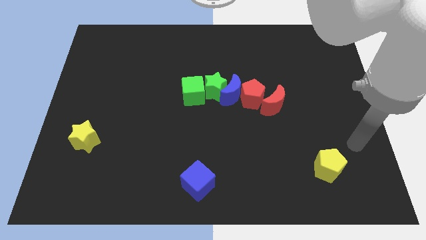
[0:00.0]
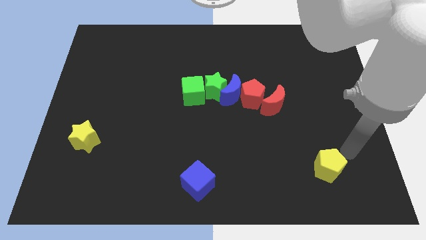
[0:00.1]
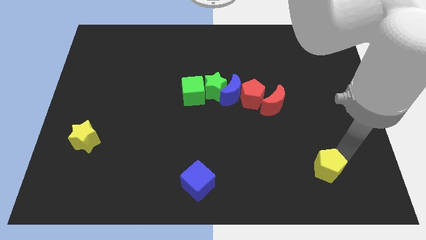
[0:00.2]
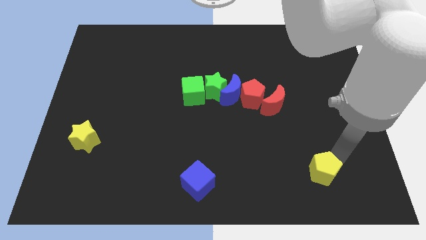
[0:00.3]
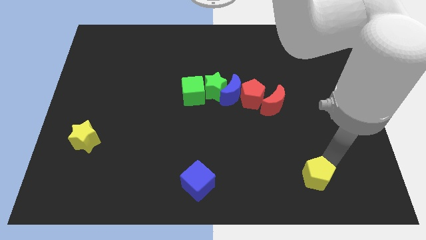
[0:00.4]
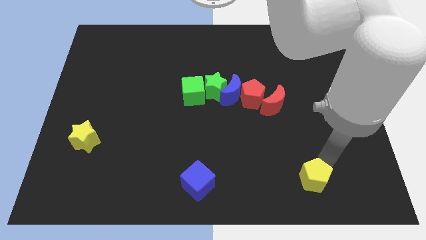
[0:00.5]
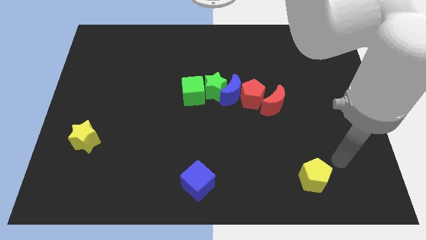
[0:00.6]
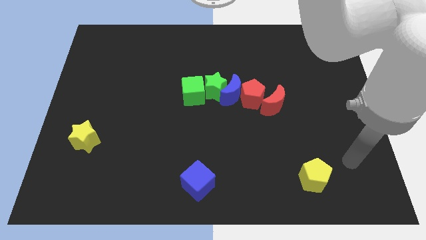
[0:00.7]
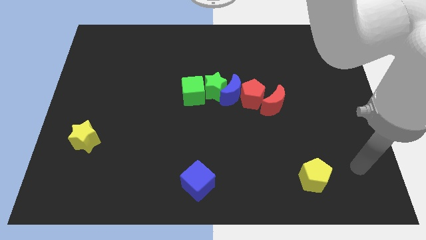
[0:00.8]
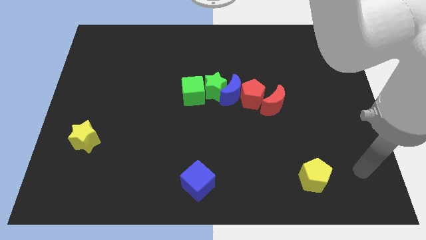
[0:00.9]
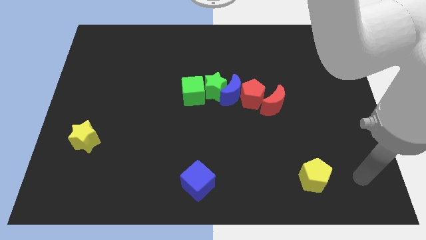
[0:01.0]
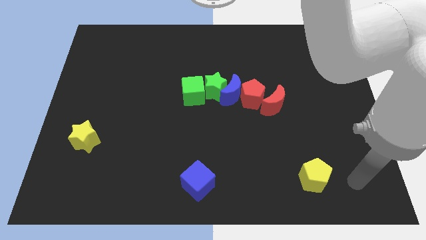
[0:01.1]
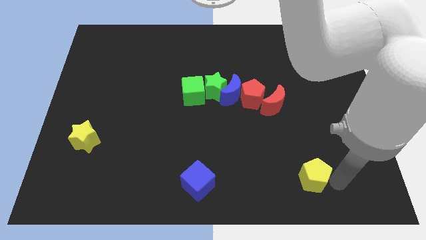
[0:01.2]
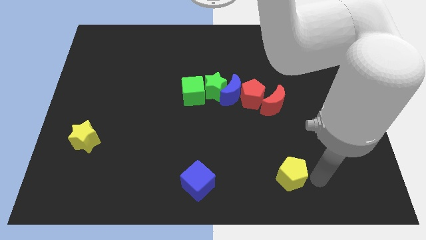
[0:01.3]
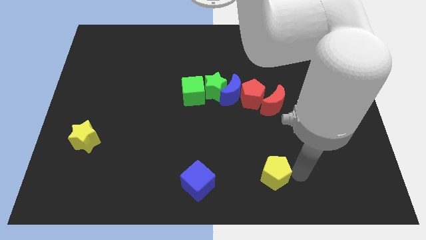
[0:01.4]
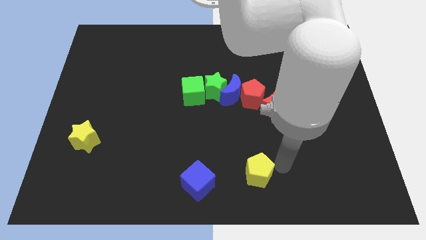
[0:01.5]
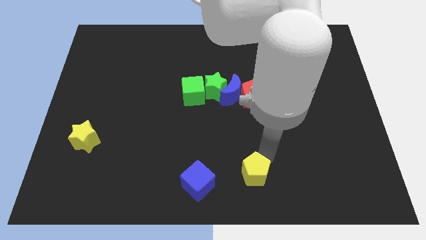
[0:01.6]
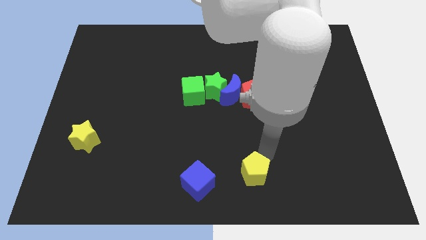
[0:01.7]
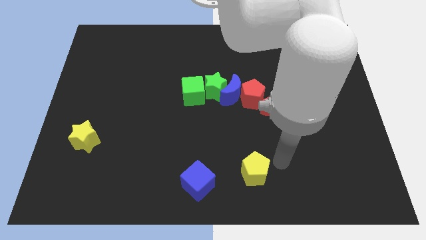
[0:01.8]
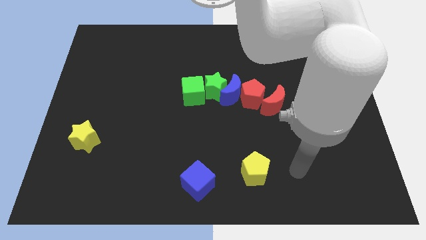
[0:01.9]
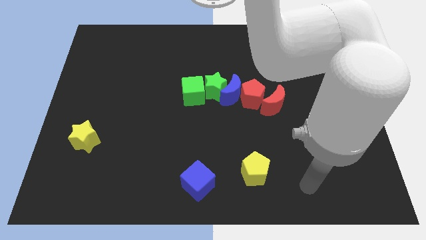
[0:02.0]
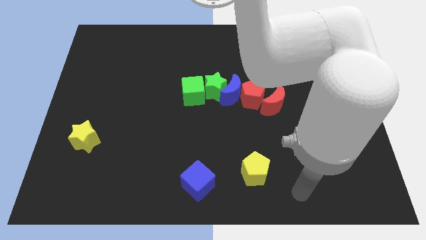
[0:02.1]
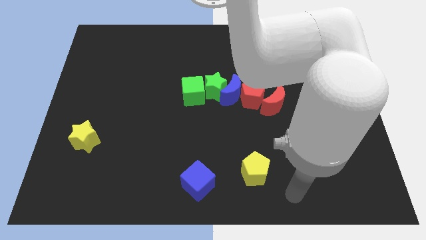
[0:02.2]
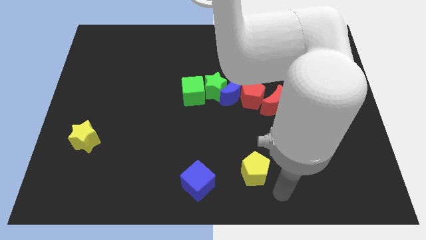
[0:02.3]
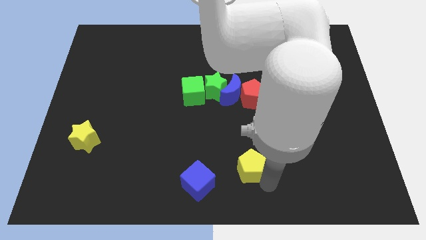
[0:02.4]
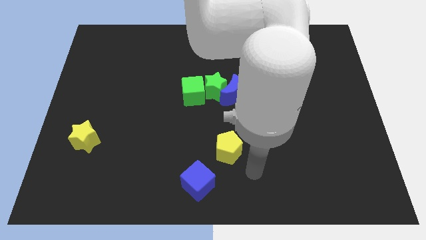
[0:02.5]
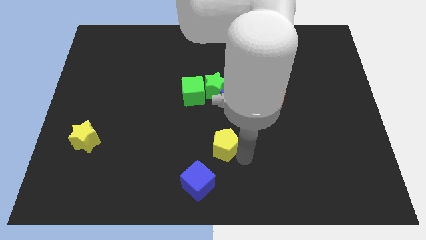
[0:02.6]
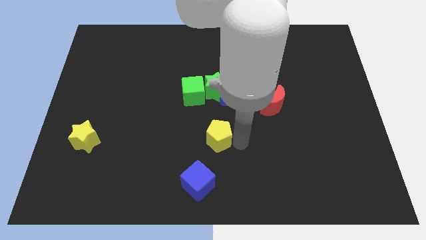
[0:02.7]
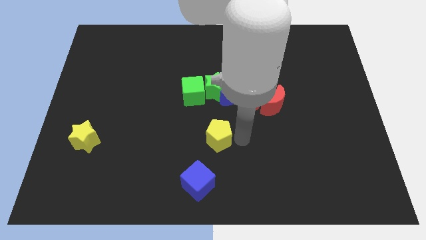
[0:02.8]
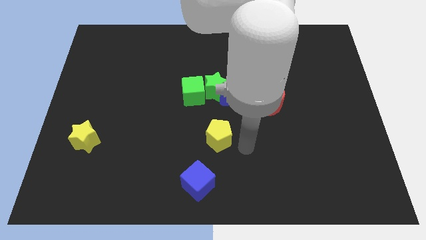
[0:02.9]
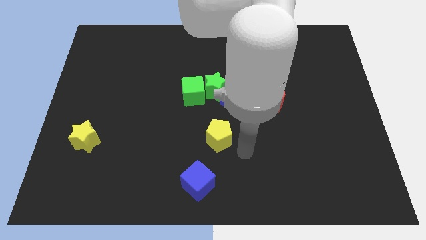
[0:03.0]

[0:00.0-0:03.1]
place the yellow pentagon below the blue moon

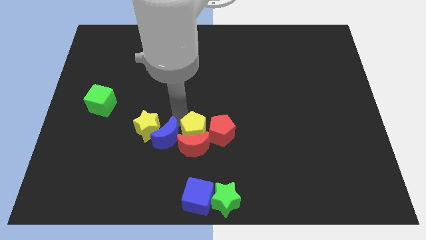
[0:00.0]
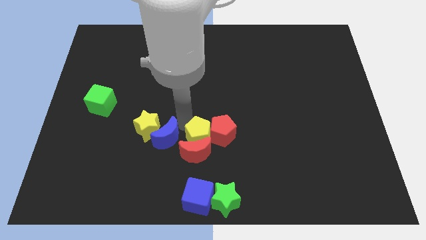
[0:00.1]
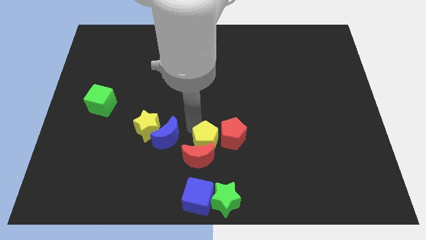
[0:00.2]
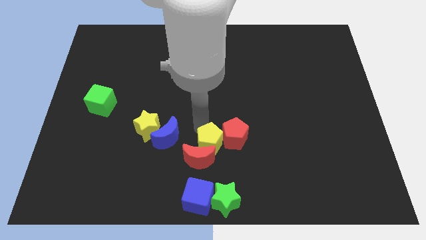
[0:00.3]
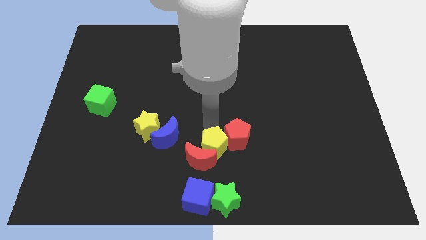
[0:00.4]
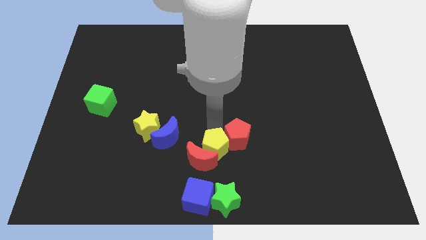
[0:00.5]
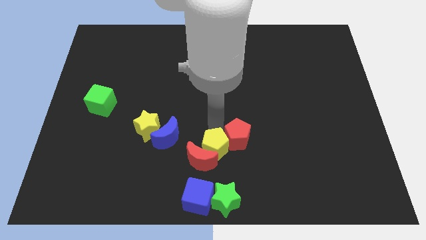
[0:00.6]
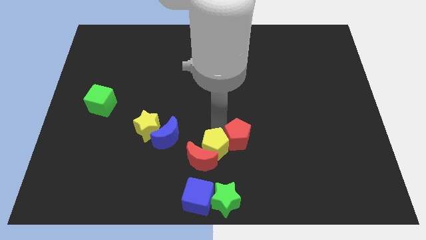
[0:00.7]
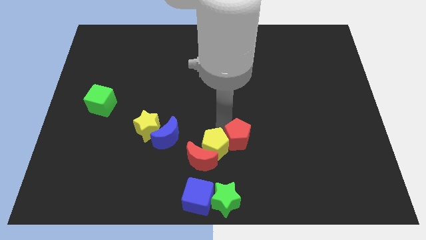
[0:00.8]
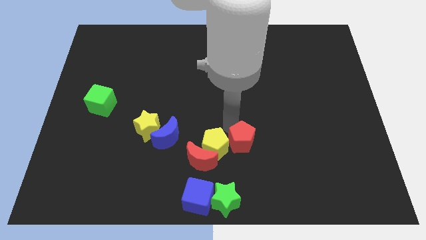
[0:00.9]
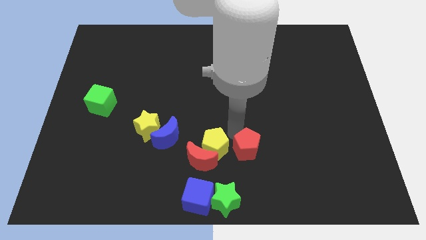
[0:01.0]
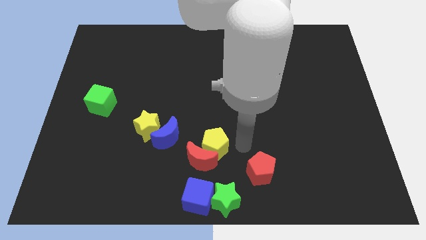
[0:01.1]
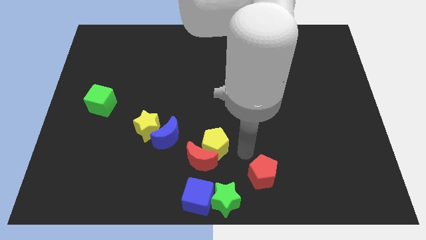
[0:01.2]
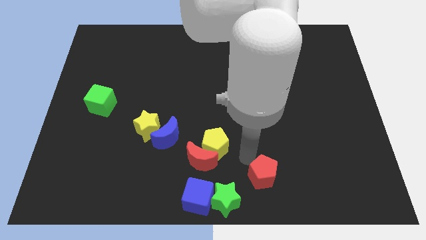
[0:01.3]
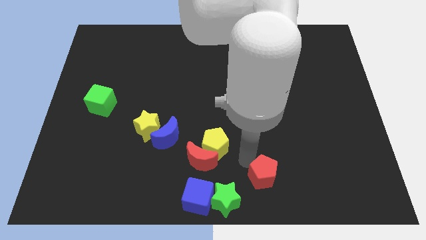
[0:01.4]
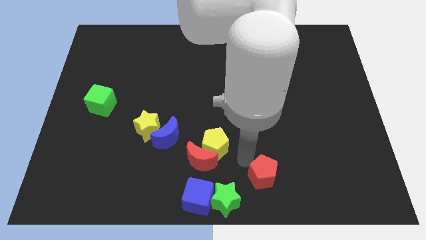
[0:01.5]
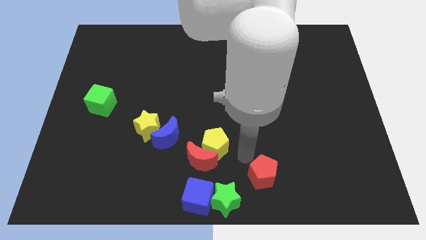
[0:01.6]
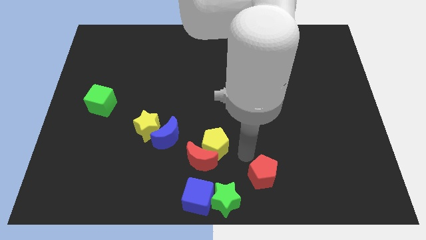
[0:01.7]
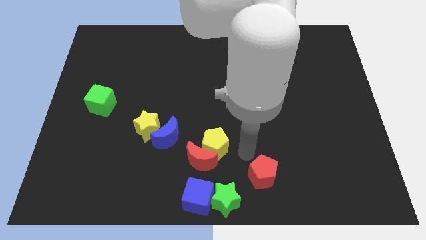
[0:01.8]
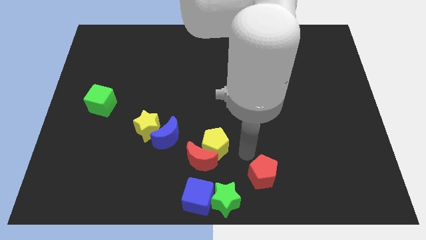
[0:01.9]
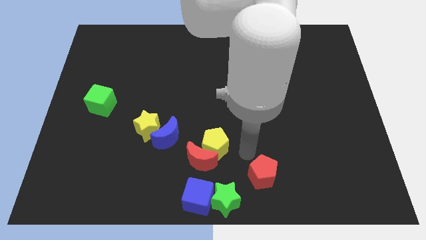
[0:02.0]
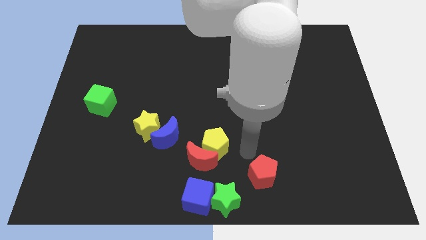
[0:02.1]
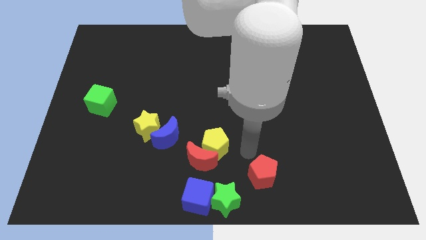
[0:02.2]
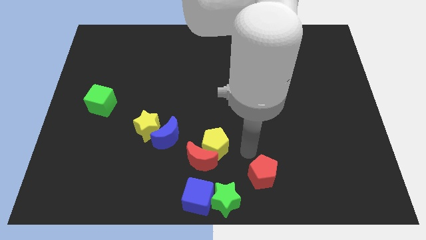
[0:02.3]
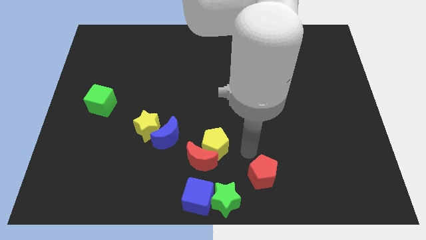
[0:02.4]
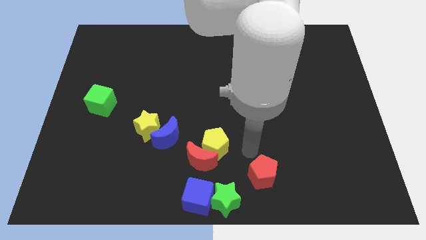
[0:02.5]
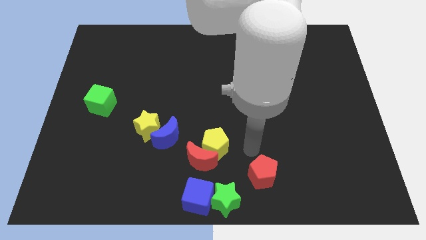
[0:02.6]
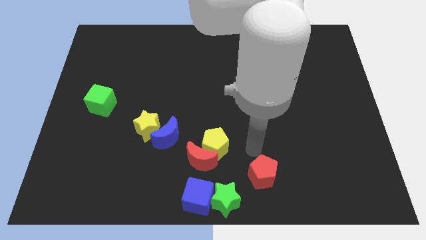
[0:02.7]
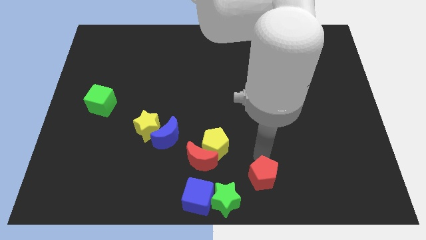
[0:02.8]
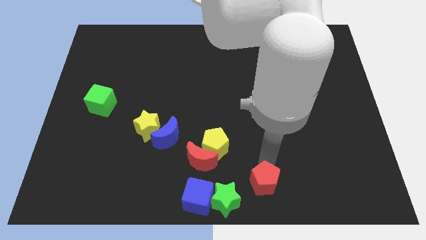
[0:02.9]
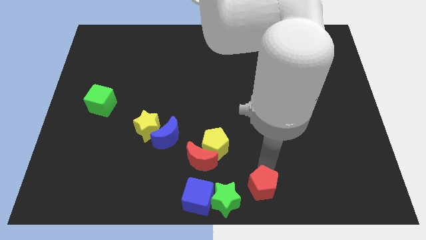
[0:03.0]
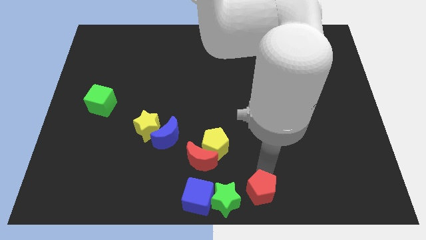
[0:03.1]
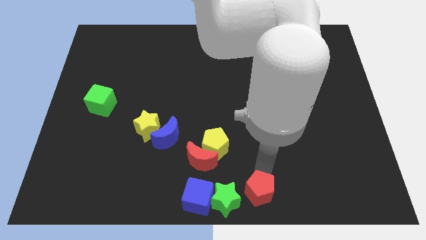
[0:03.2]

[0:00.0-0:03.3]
move the red pentagon towards the bottom center of the board

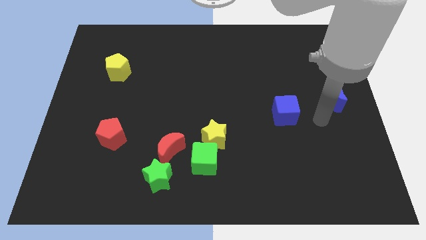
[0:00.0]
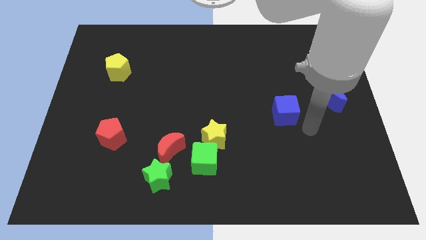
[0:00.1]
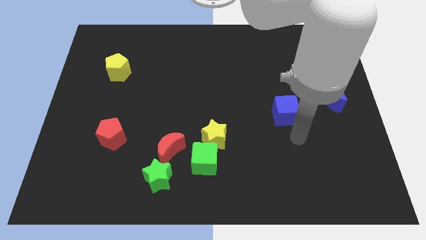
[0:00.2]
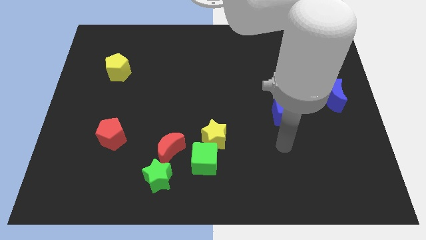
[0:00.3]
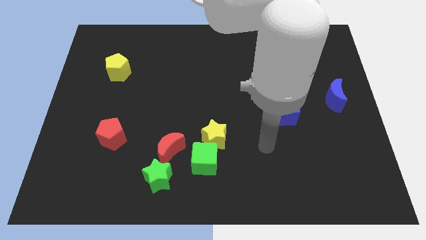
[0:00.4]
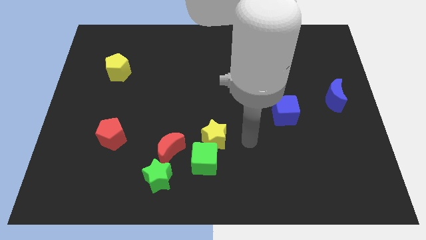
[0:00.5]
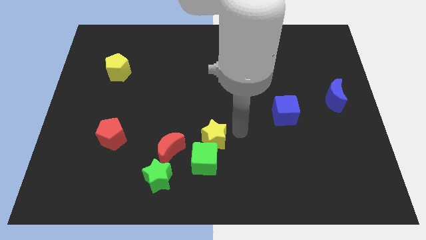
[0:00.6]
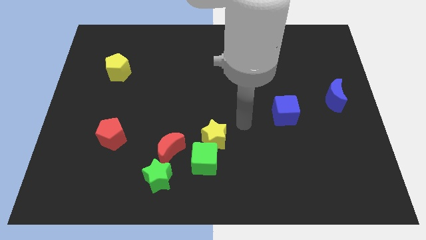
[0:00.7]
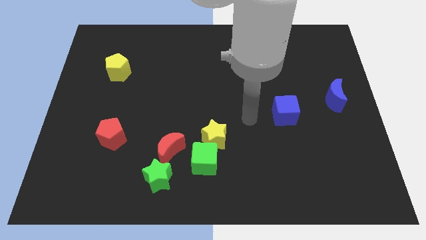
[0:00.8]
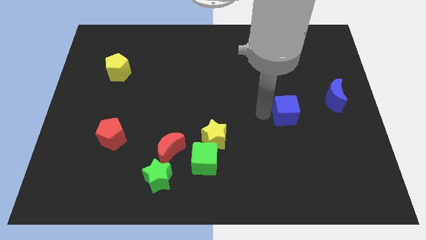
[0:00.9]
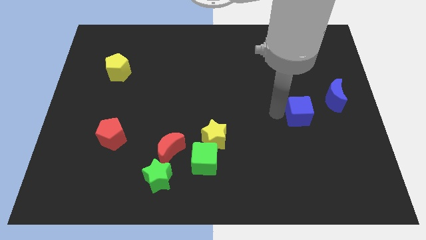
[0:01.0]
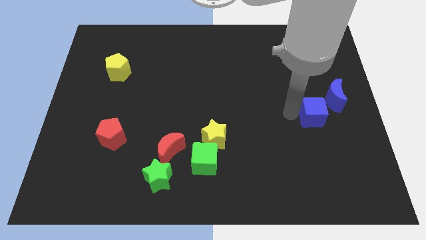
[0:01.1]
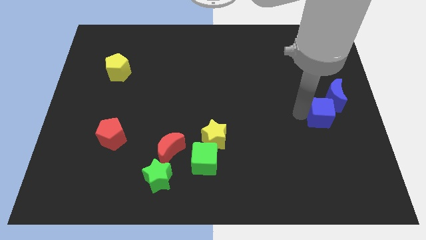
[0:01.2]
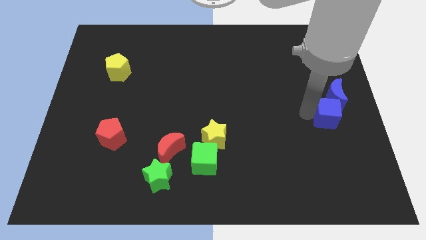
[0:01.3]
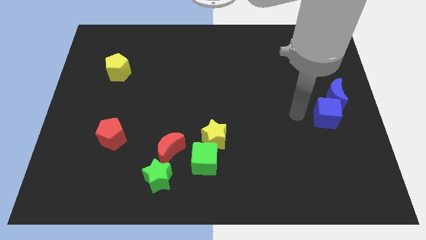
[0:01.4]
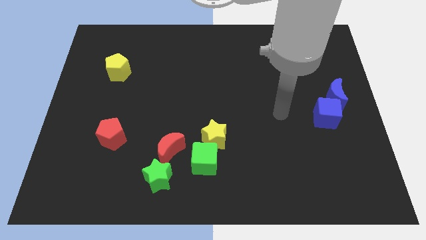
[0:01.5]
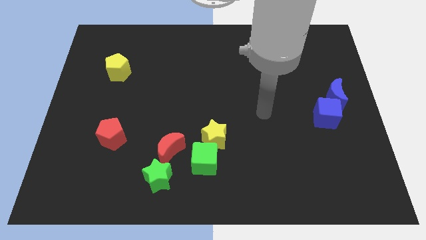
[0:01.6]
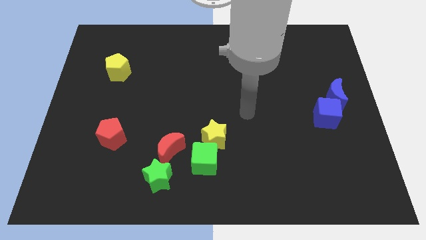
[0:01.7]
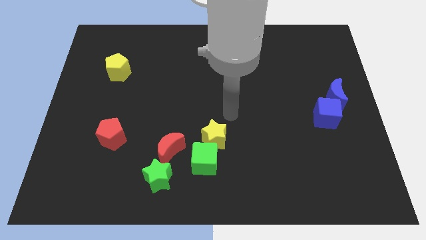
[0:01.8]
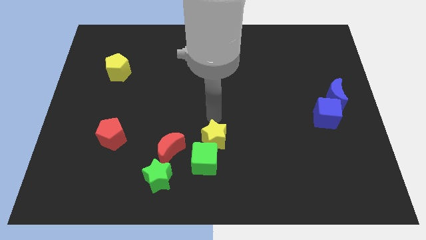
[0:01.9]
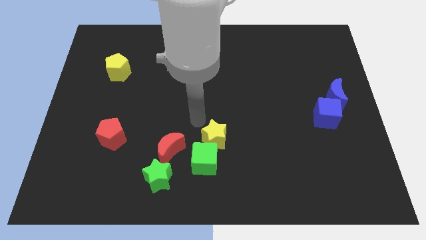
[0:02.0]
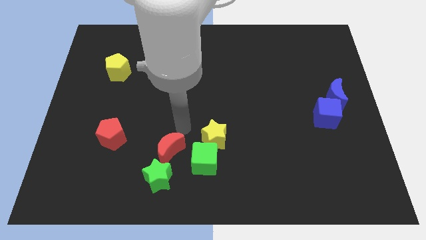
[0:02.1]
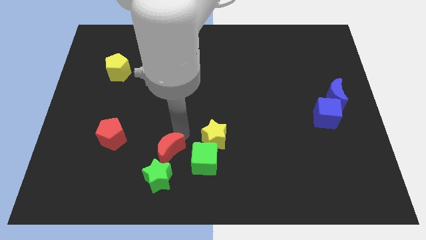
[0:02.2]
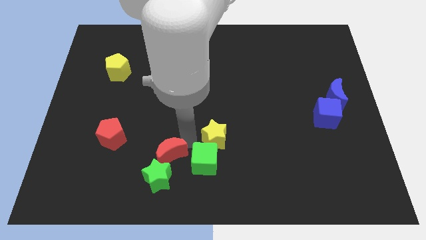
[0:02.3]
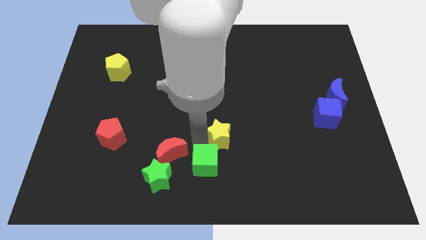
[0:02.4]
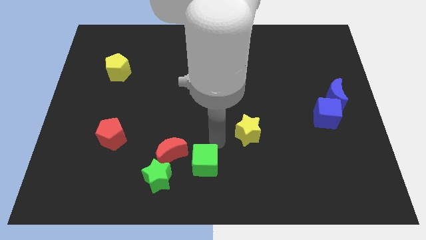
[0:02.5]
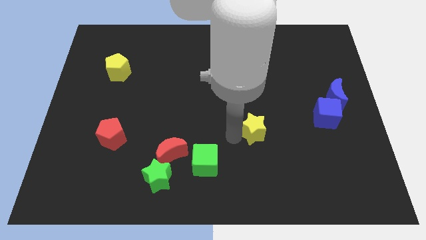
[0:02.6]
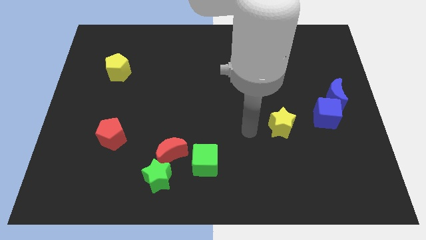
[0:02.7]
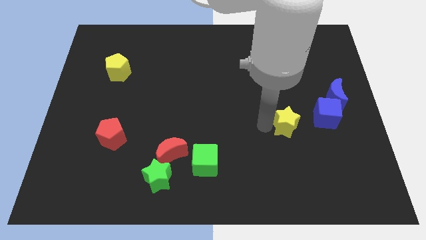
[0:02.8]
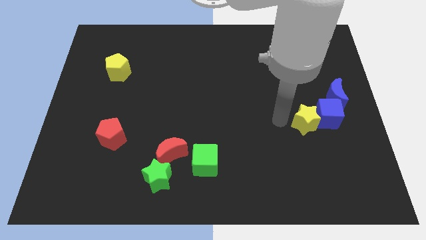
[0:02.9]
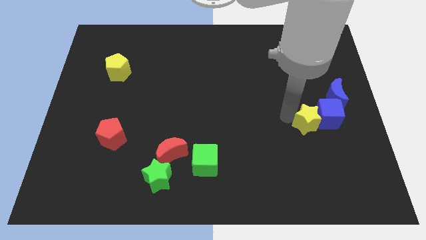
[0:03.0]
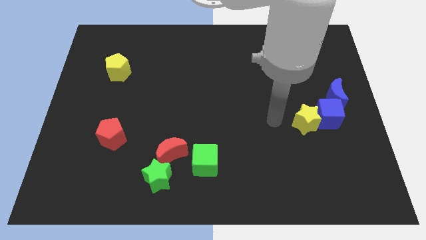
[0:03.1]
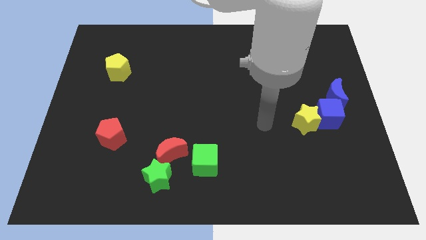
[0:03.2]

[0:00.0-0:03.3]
put the blue cube and yellow star together at the bottom side of the blue moon
